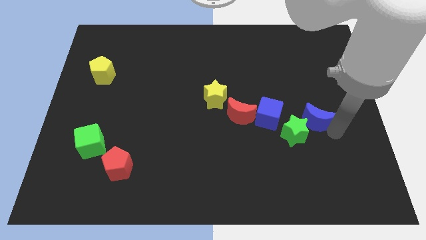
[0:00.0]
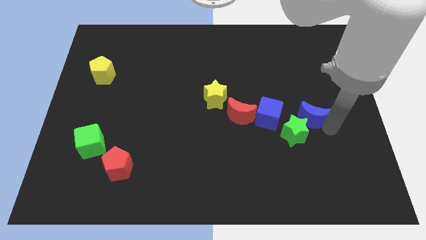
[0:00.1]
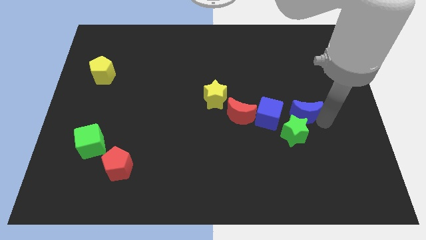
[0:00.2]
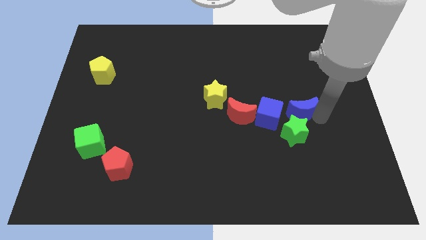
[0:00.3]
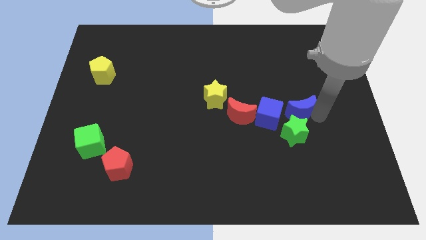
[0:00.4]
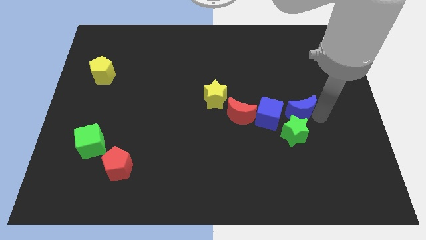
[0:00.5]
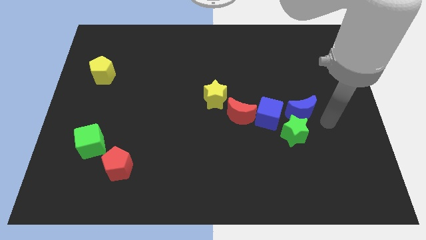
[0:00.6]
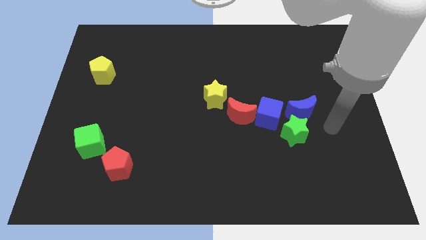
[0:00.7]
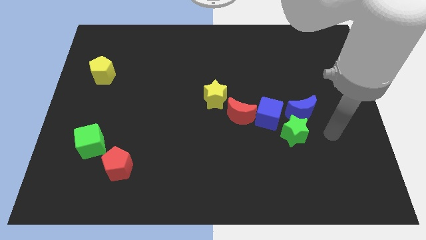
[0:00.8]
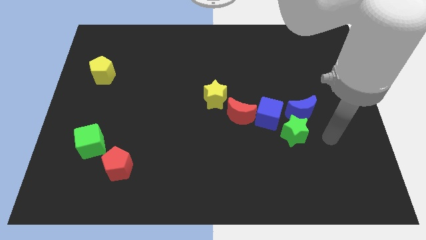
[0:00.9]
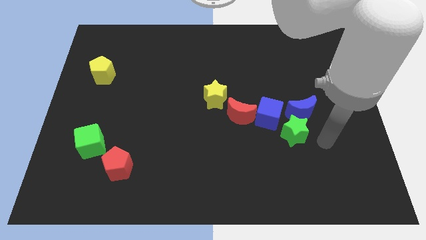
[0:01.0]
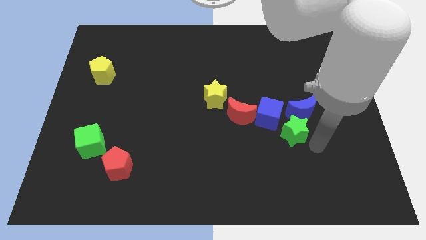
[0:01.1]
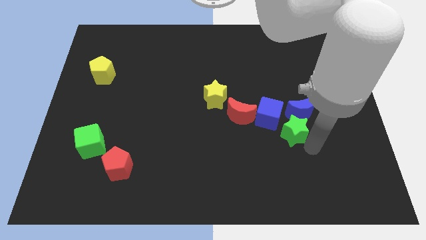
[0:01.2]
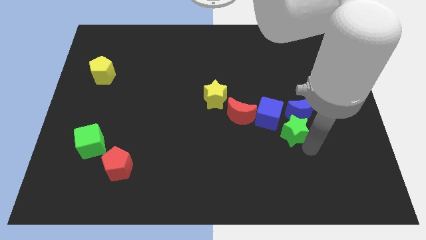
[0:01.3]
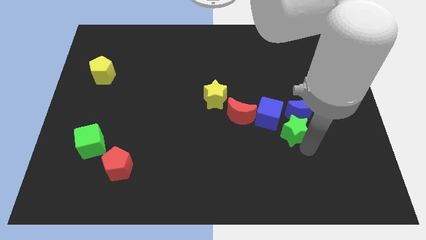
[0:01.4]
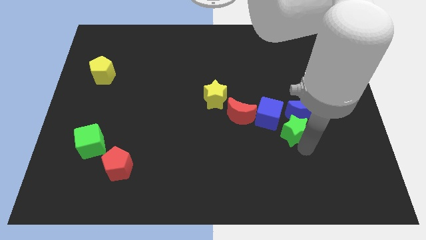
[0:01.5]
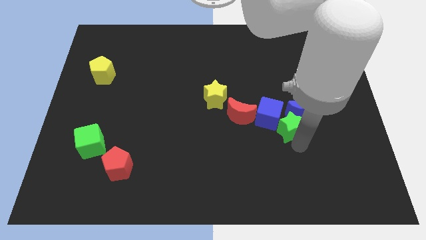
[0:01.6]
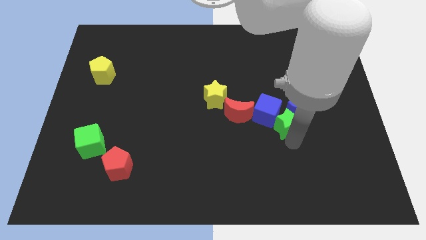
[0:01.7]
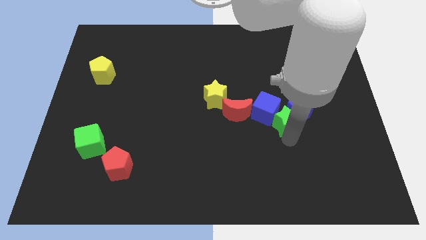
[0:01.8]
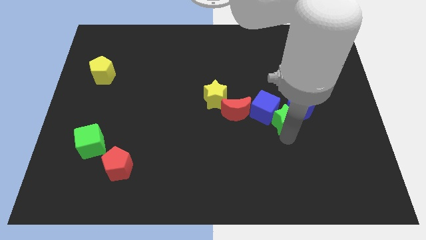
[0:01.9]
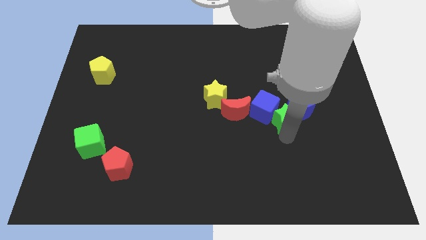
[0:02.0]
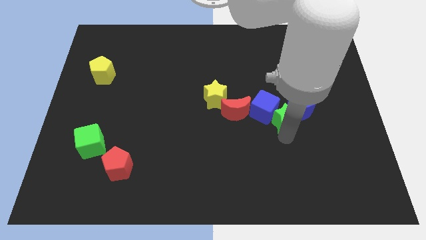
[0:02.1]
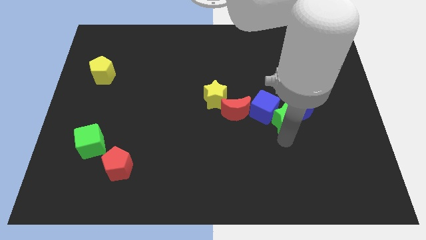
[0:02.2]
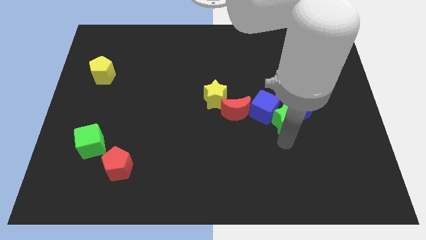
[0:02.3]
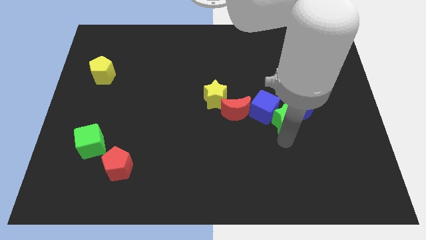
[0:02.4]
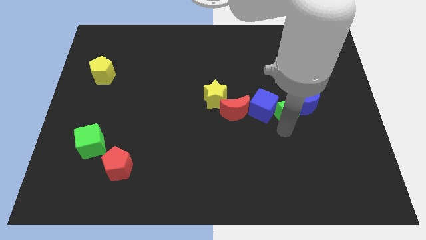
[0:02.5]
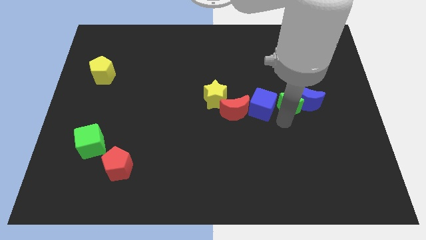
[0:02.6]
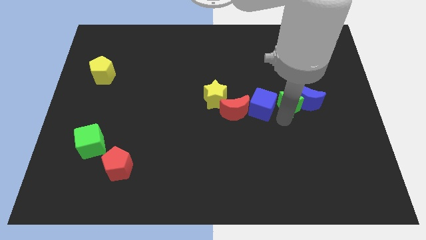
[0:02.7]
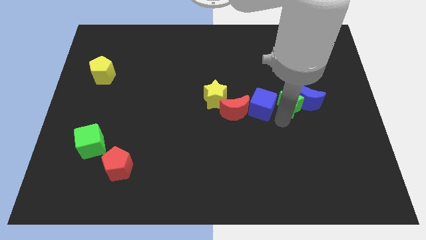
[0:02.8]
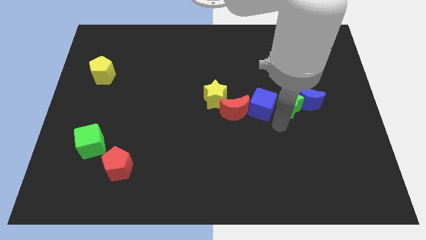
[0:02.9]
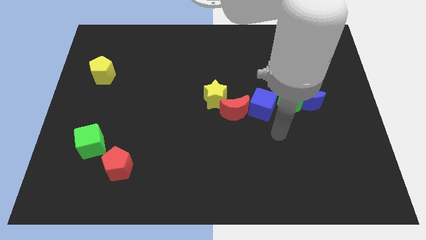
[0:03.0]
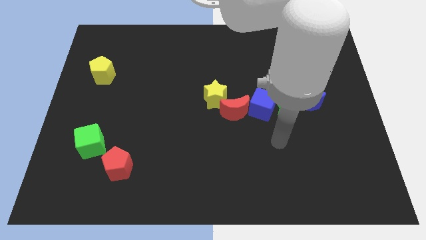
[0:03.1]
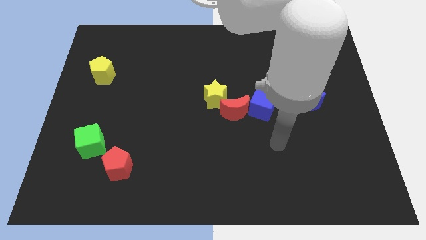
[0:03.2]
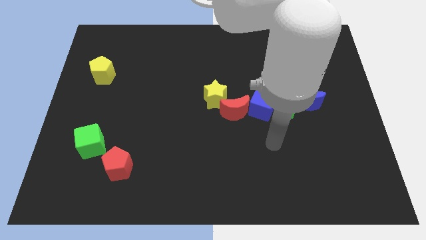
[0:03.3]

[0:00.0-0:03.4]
move the green star between the blue cube and blue crescent

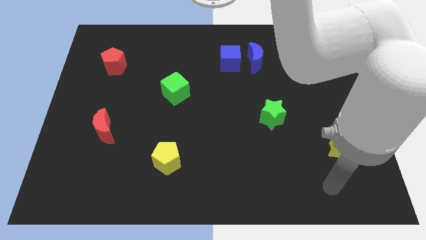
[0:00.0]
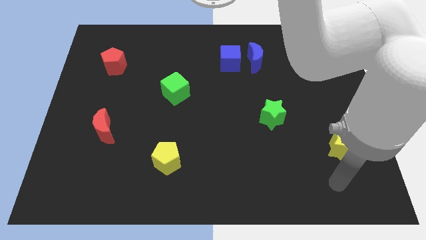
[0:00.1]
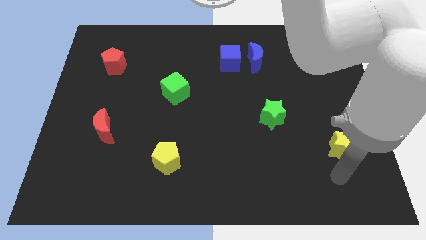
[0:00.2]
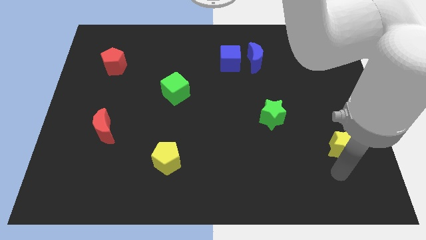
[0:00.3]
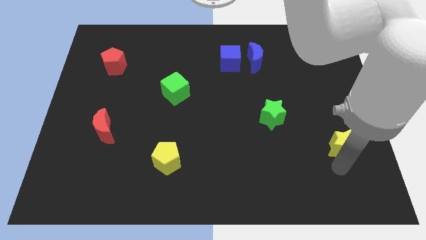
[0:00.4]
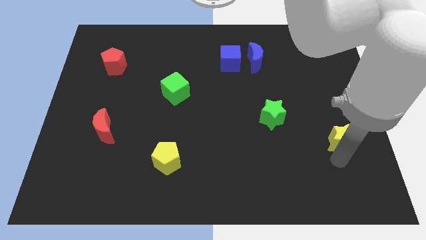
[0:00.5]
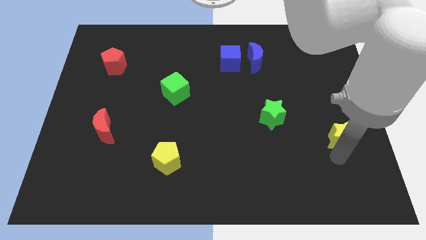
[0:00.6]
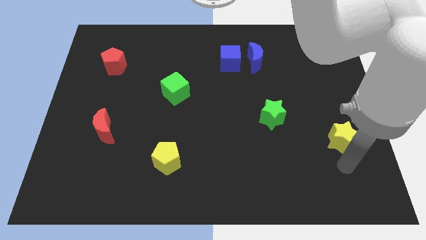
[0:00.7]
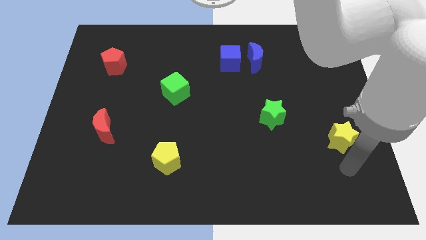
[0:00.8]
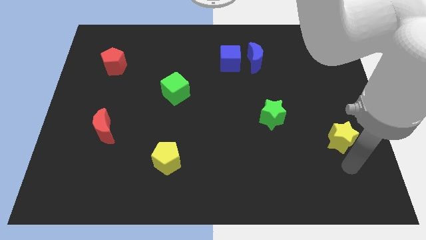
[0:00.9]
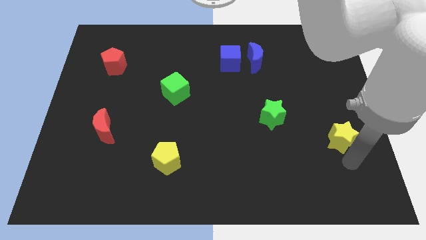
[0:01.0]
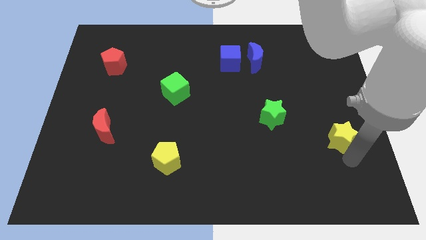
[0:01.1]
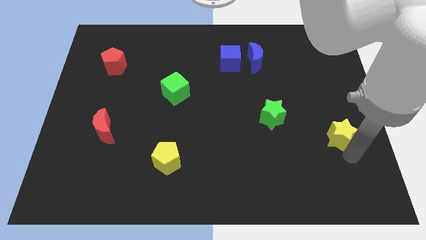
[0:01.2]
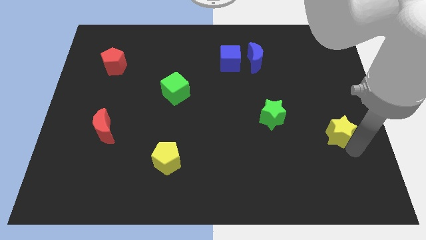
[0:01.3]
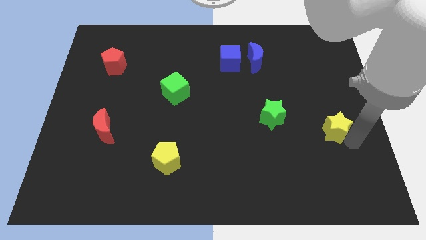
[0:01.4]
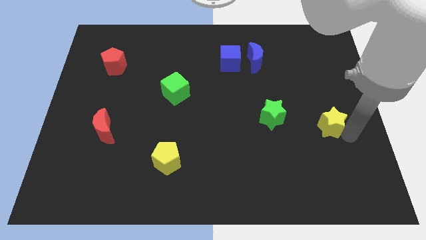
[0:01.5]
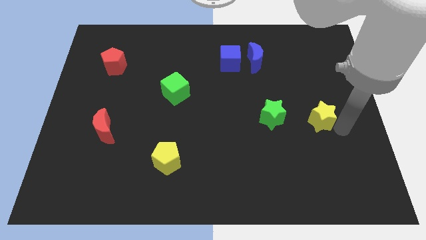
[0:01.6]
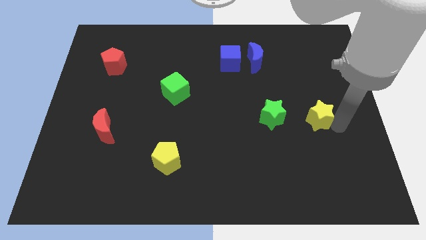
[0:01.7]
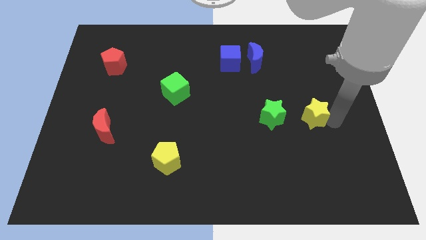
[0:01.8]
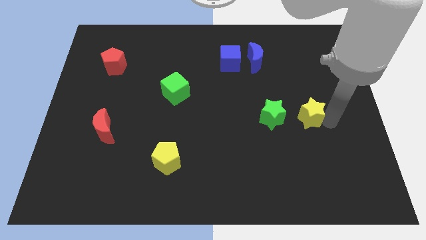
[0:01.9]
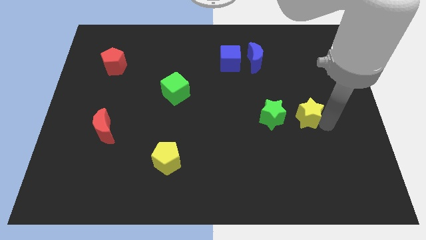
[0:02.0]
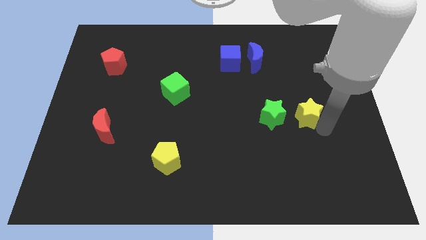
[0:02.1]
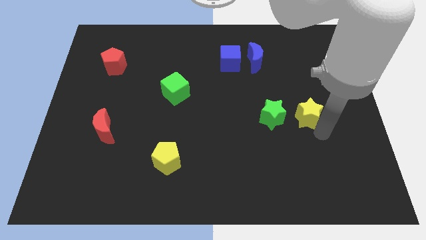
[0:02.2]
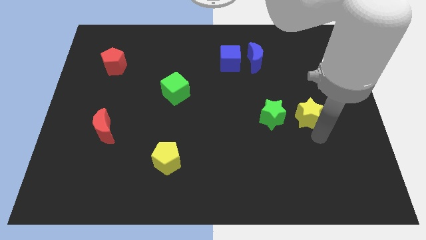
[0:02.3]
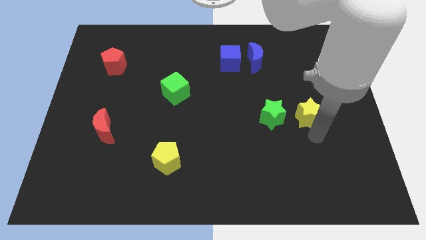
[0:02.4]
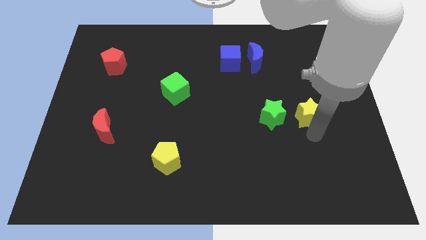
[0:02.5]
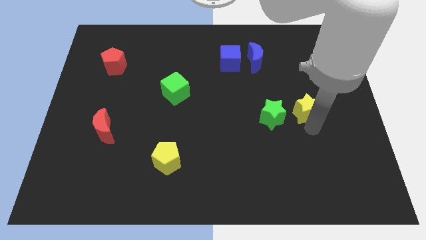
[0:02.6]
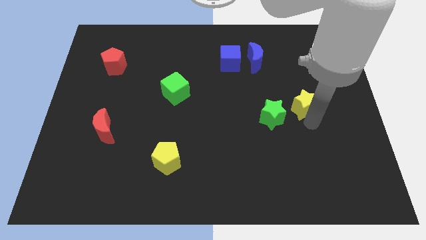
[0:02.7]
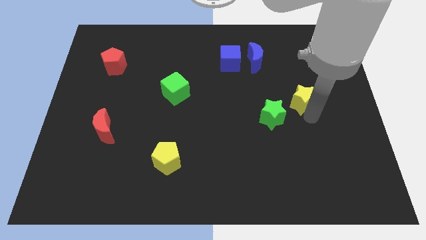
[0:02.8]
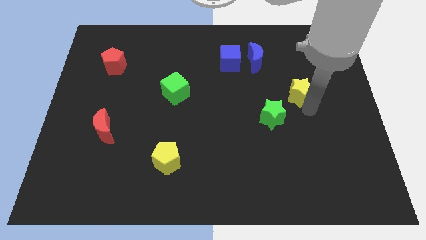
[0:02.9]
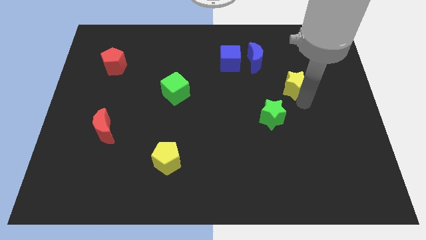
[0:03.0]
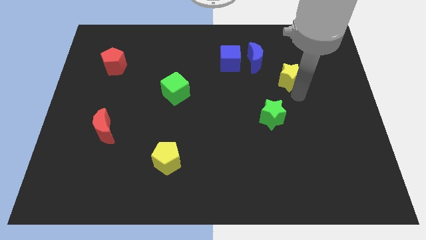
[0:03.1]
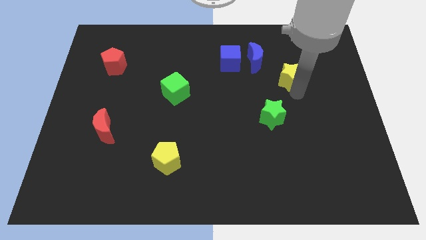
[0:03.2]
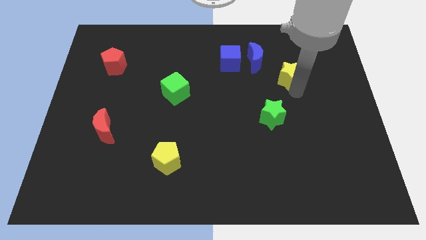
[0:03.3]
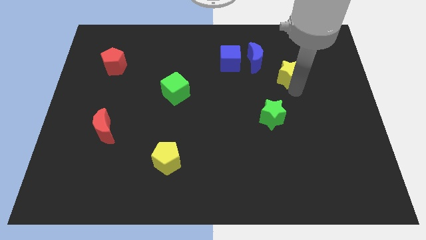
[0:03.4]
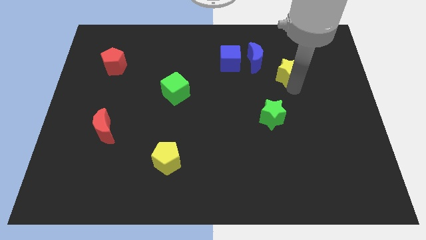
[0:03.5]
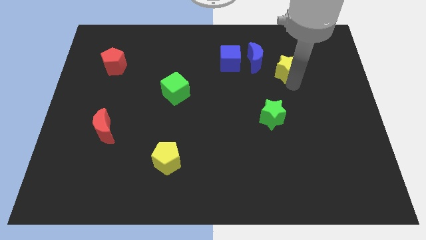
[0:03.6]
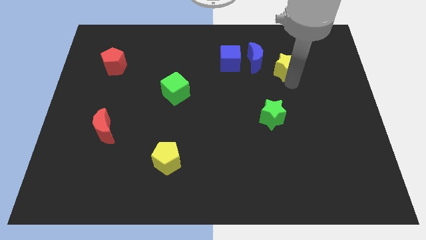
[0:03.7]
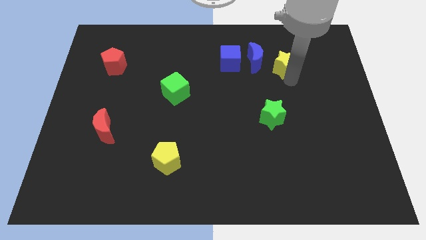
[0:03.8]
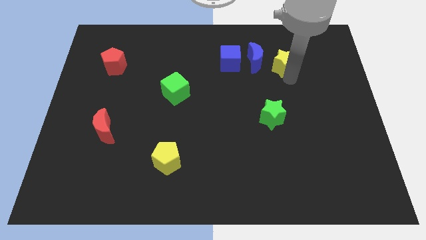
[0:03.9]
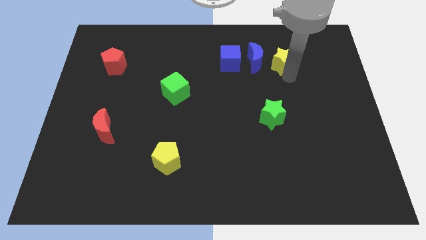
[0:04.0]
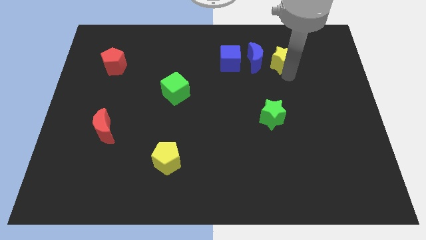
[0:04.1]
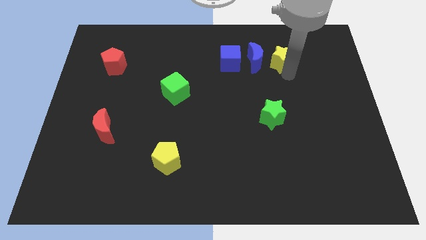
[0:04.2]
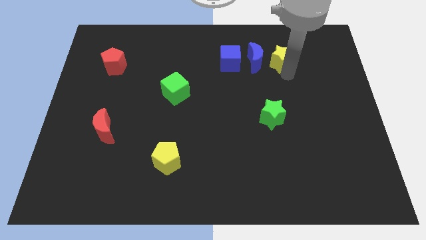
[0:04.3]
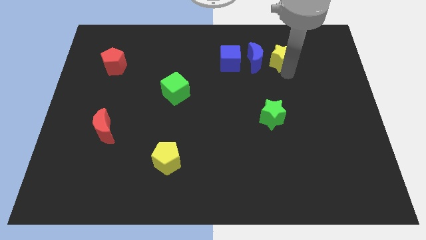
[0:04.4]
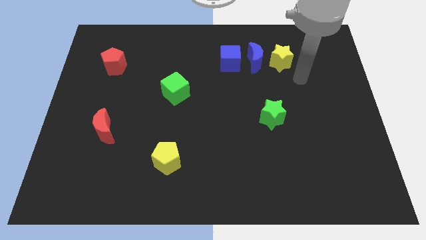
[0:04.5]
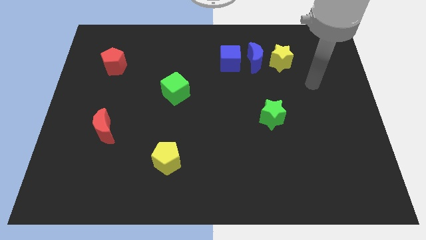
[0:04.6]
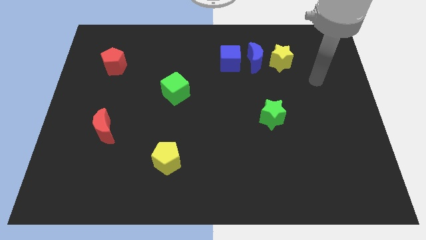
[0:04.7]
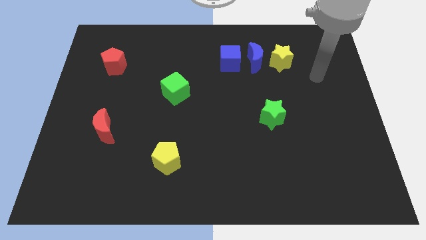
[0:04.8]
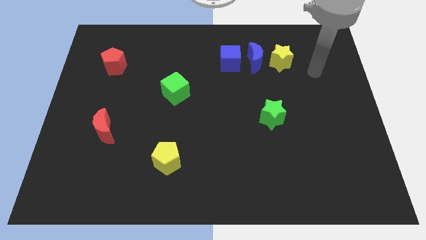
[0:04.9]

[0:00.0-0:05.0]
place the yellow star to the right of the blue crescent

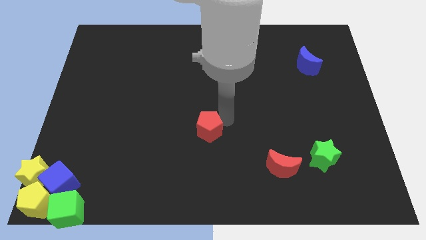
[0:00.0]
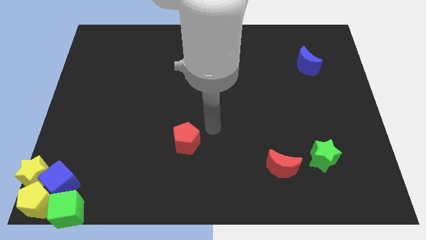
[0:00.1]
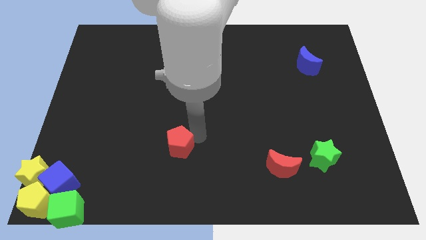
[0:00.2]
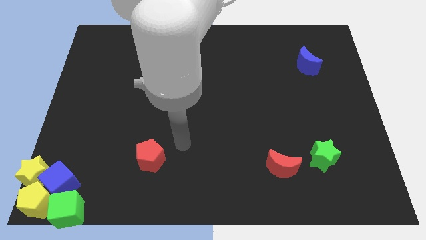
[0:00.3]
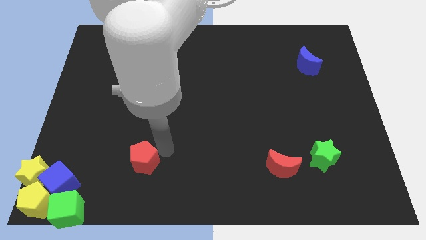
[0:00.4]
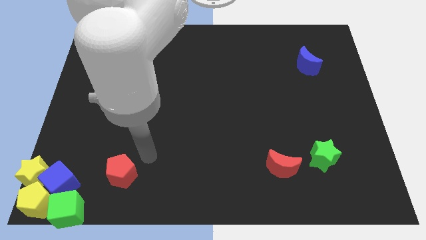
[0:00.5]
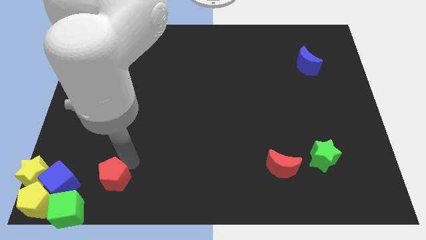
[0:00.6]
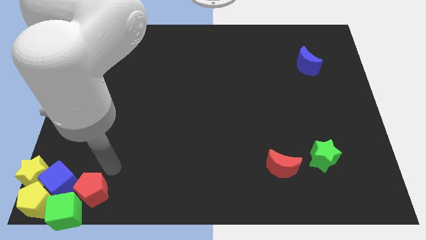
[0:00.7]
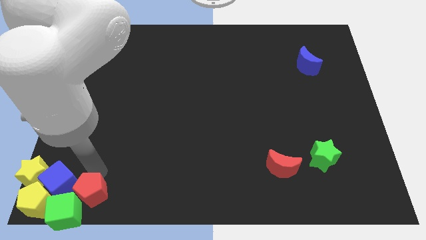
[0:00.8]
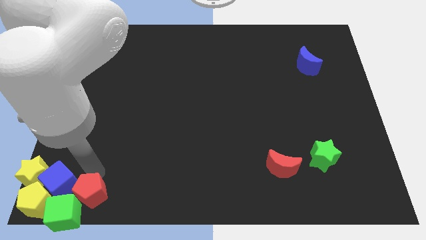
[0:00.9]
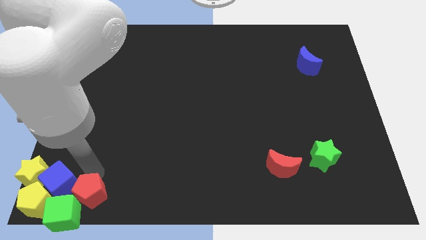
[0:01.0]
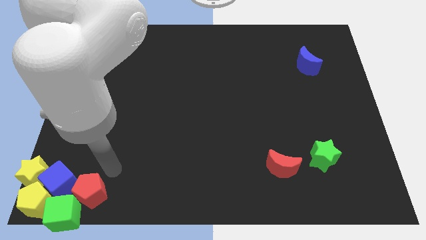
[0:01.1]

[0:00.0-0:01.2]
push the red pentagon right to the blue cube
